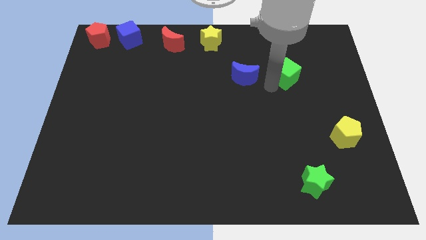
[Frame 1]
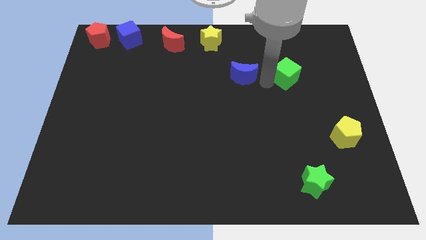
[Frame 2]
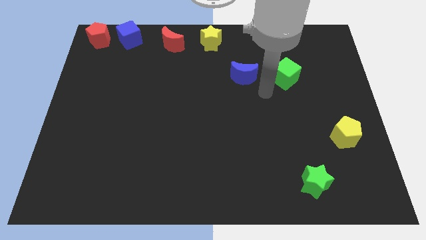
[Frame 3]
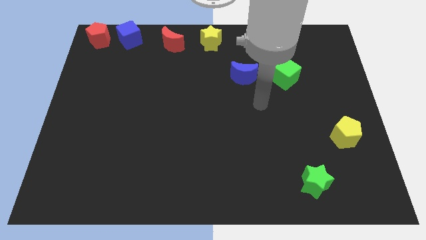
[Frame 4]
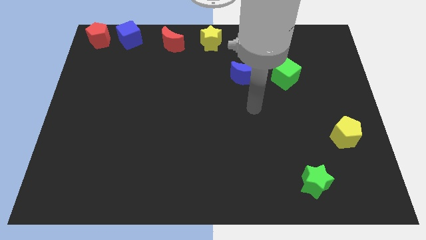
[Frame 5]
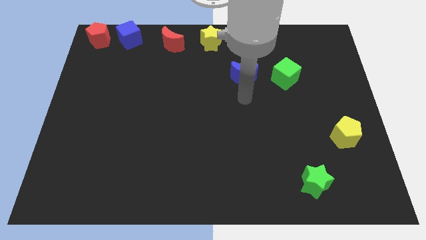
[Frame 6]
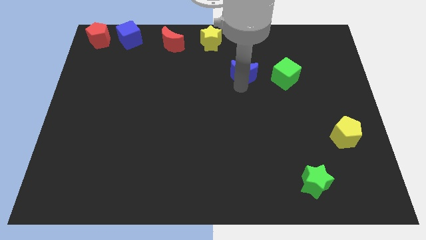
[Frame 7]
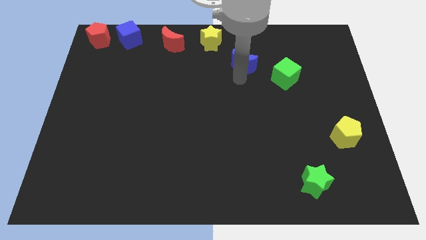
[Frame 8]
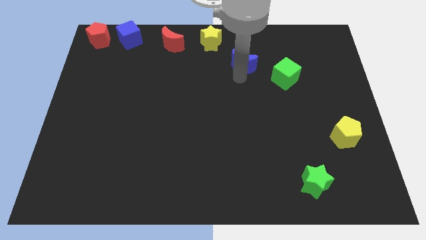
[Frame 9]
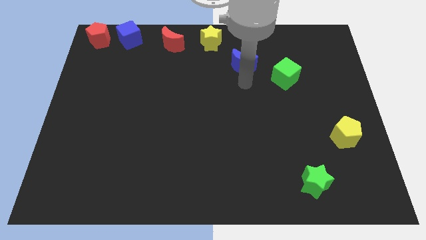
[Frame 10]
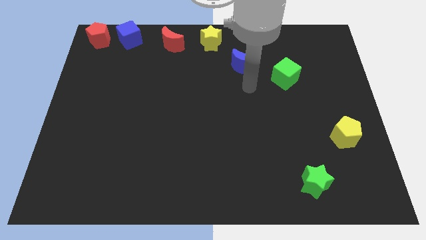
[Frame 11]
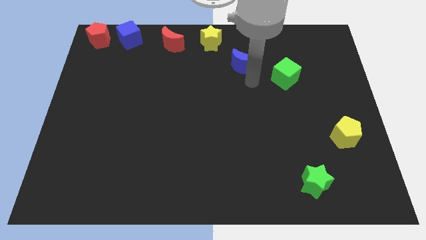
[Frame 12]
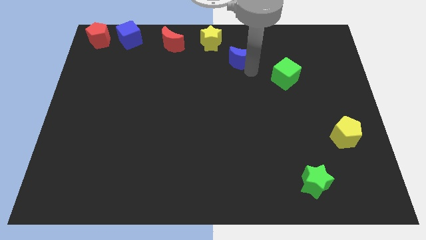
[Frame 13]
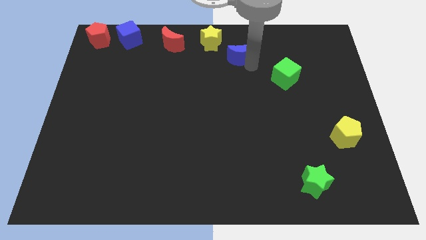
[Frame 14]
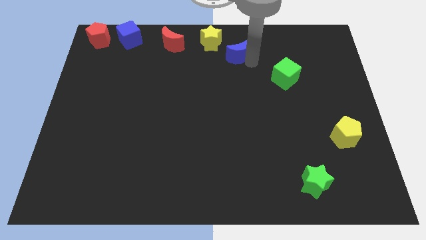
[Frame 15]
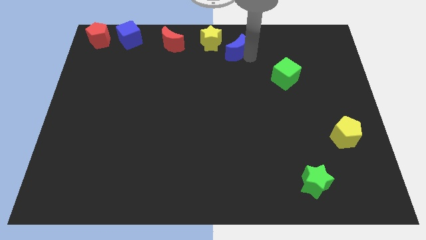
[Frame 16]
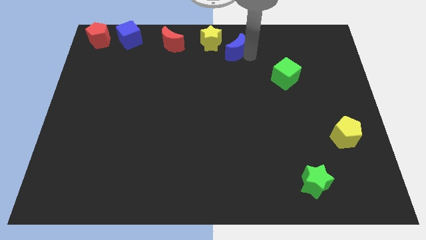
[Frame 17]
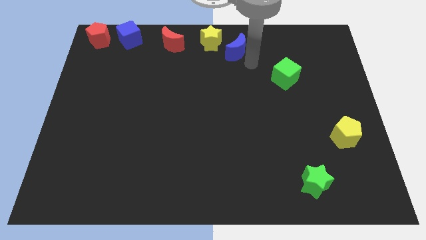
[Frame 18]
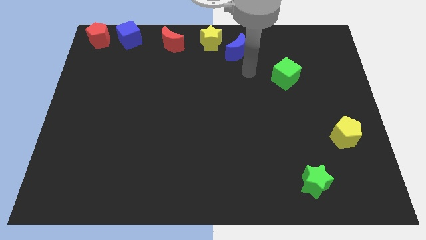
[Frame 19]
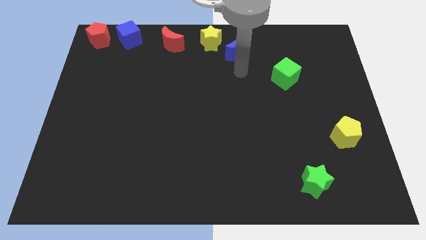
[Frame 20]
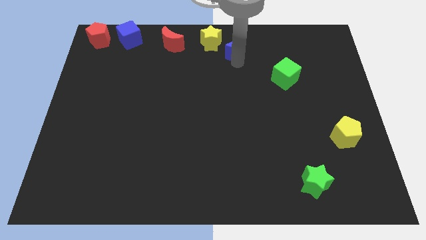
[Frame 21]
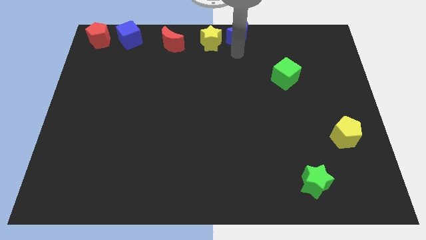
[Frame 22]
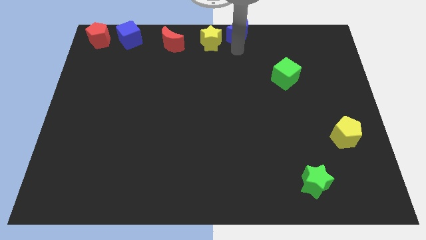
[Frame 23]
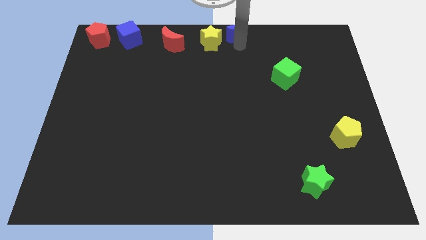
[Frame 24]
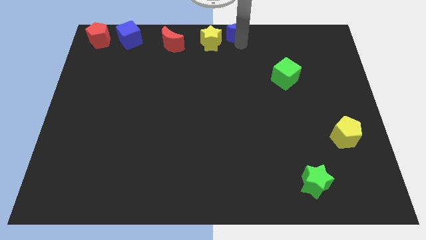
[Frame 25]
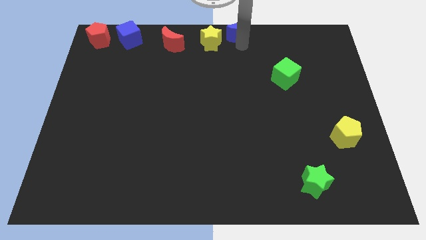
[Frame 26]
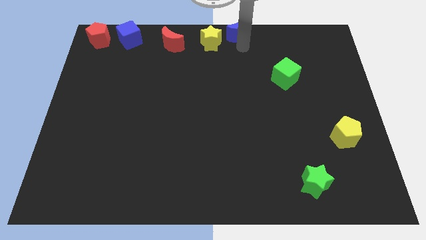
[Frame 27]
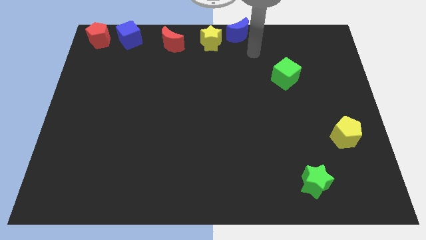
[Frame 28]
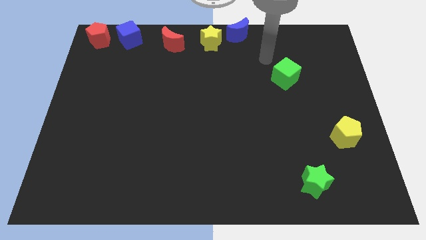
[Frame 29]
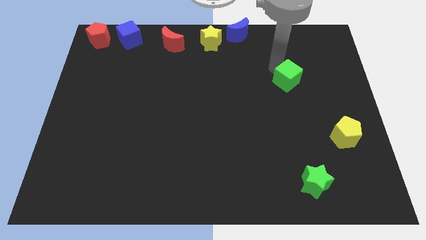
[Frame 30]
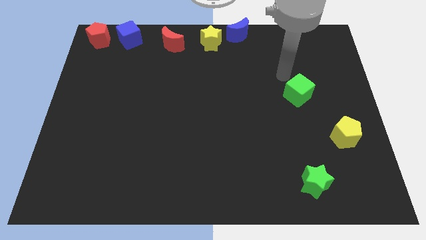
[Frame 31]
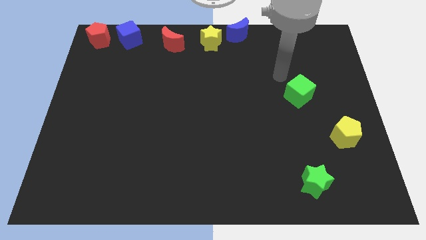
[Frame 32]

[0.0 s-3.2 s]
move blue moon towards yellow star

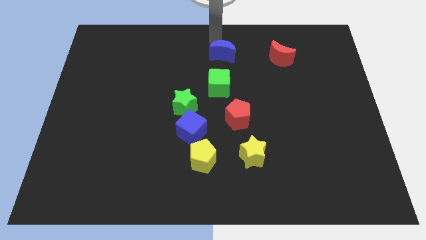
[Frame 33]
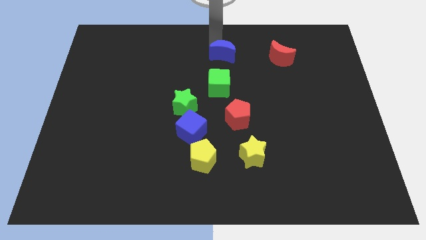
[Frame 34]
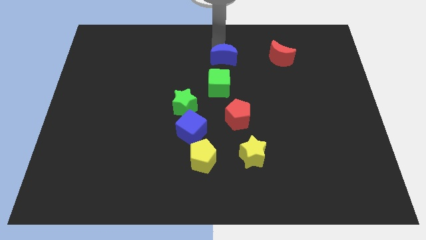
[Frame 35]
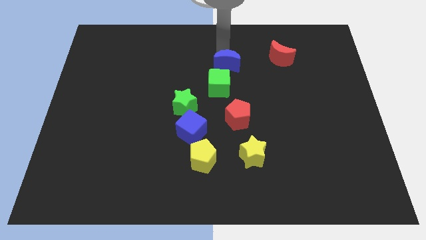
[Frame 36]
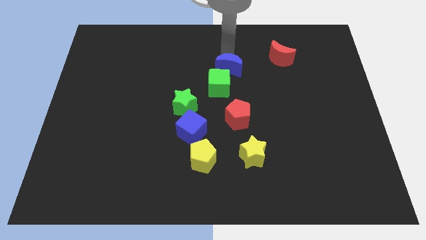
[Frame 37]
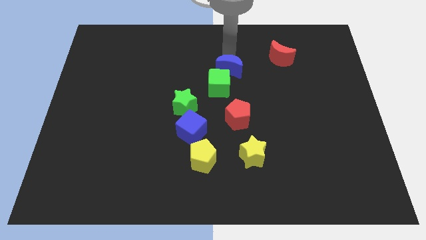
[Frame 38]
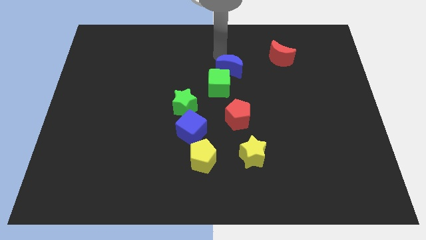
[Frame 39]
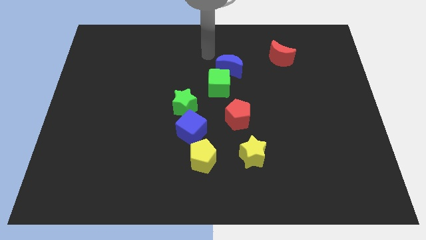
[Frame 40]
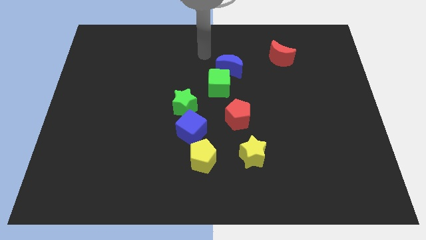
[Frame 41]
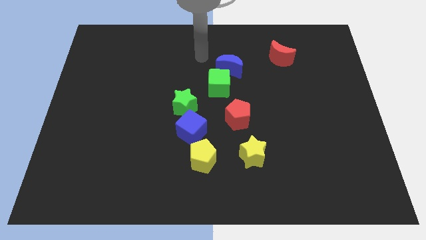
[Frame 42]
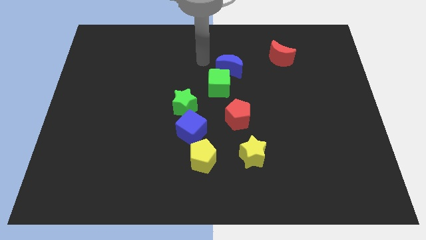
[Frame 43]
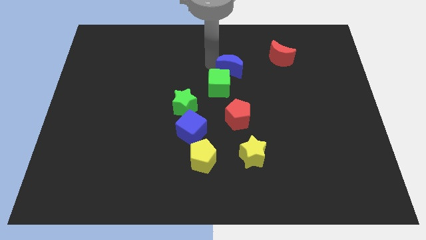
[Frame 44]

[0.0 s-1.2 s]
push the blue crescent towards the green cube

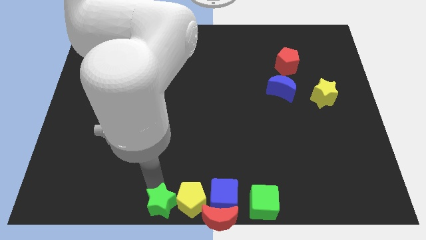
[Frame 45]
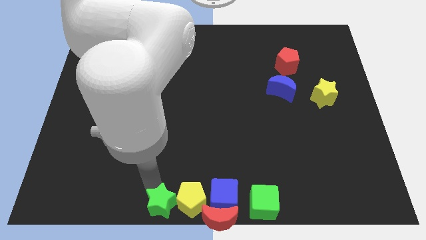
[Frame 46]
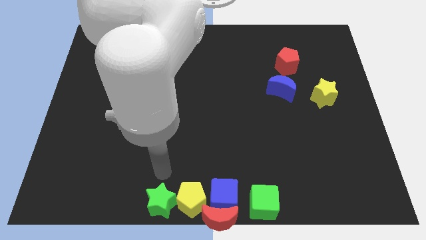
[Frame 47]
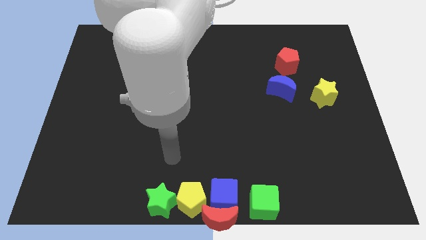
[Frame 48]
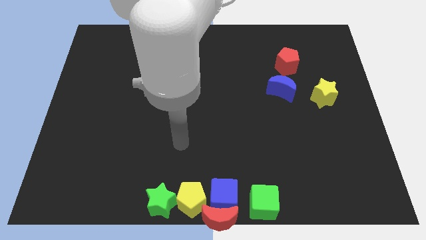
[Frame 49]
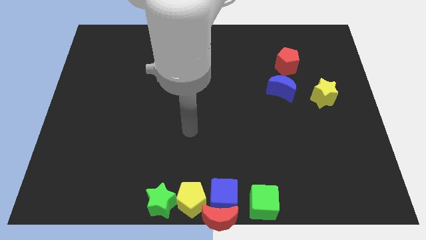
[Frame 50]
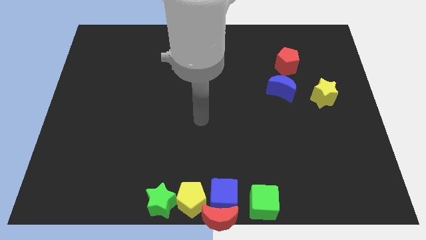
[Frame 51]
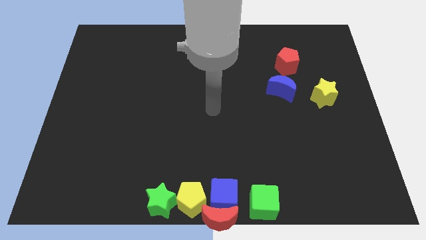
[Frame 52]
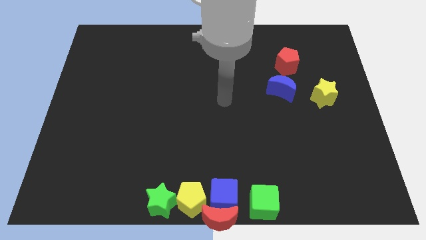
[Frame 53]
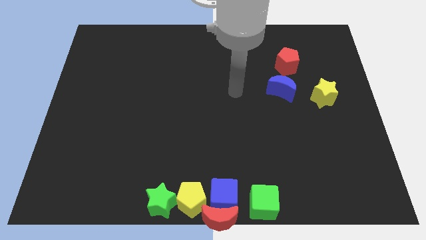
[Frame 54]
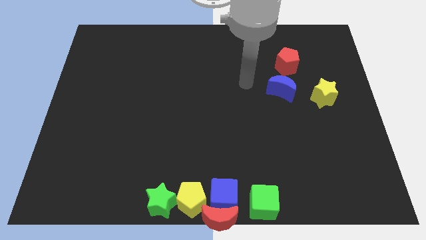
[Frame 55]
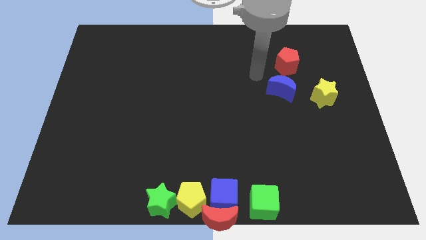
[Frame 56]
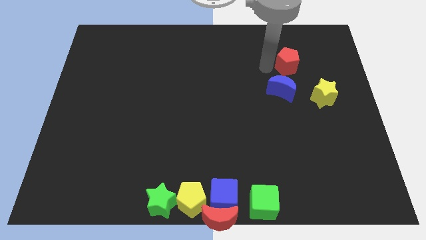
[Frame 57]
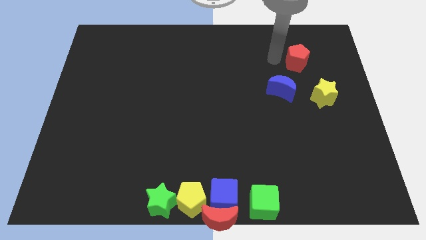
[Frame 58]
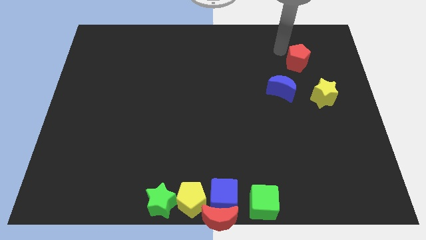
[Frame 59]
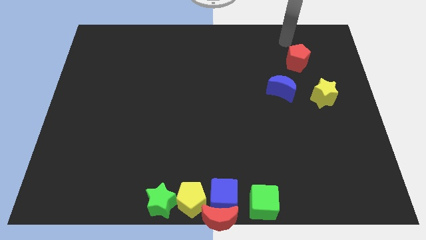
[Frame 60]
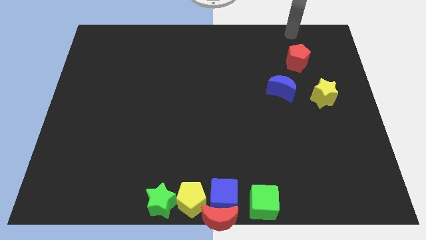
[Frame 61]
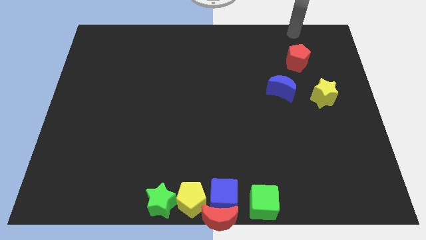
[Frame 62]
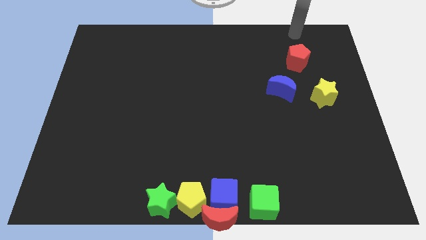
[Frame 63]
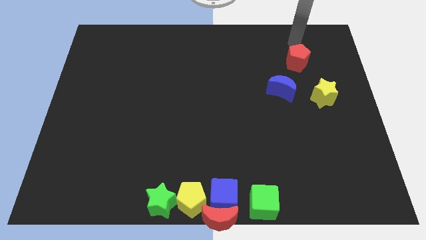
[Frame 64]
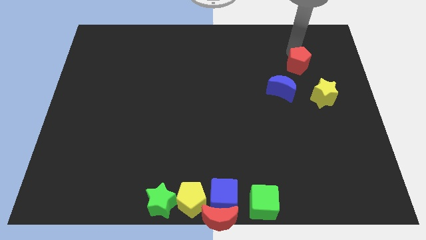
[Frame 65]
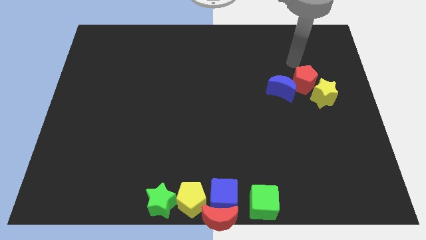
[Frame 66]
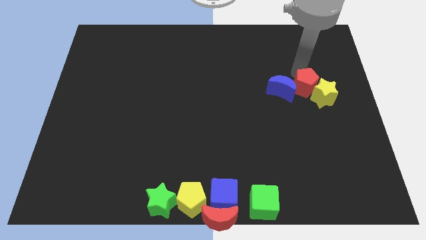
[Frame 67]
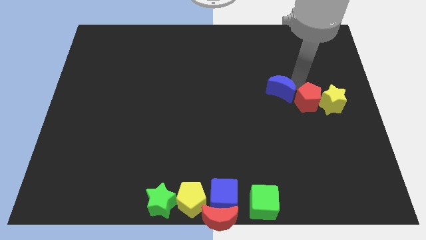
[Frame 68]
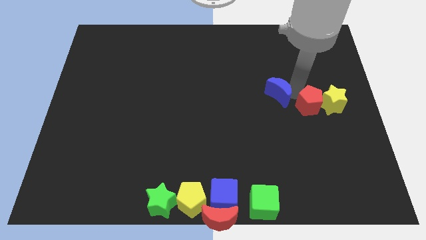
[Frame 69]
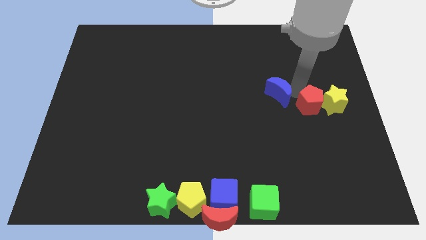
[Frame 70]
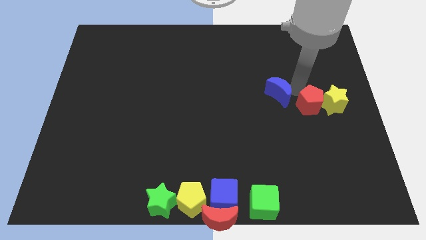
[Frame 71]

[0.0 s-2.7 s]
place the red pentagon left to the yellow star

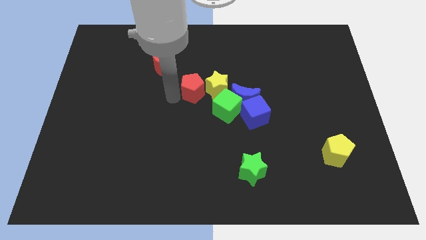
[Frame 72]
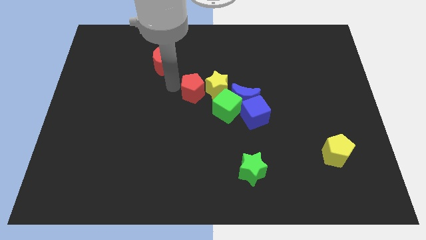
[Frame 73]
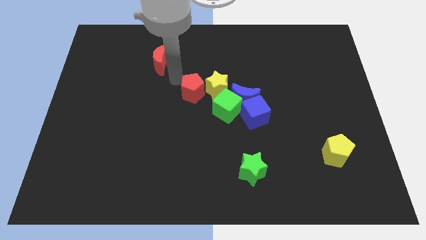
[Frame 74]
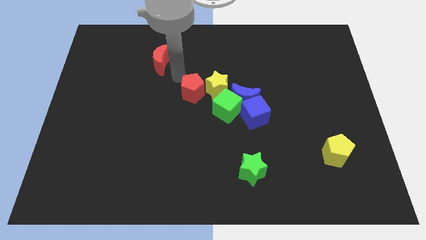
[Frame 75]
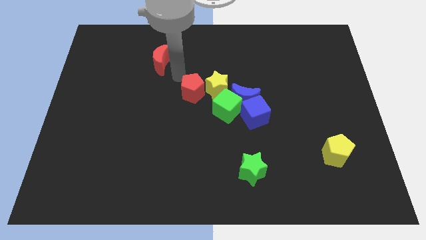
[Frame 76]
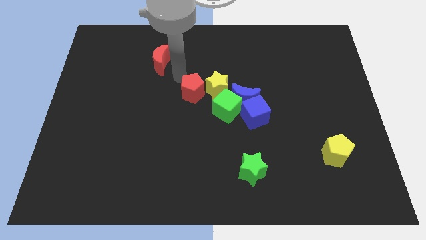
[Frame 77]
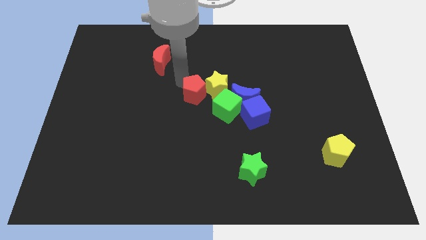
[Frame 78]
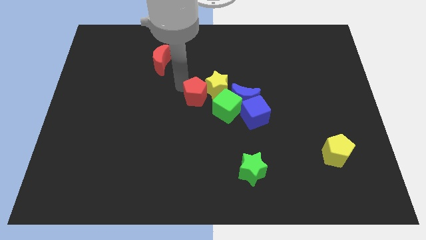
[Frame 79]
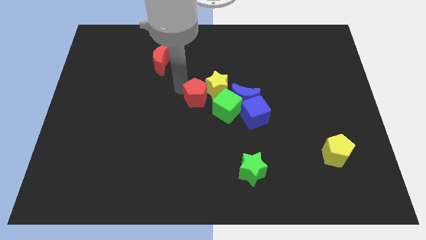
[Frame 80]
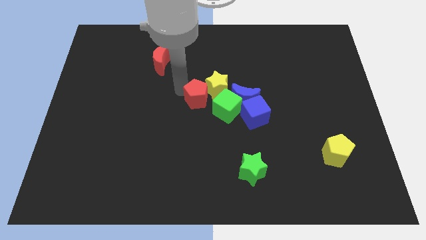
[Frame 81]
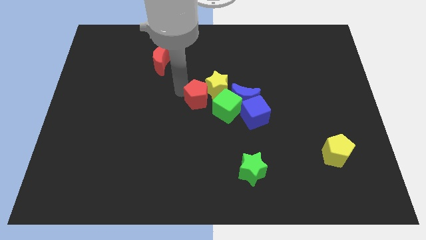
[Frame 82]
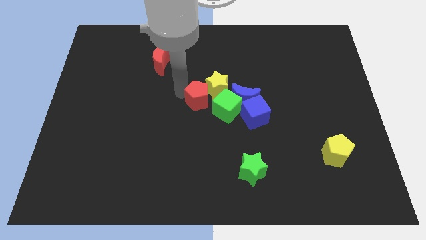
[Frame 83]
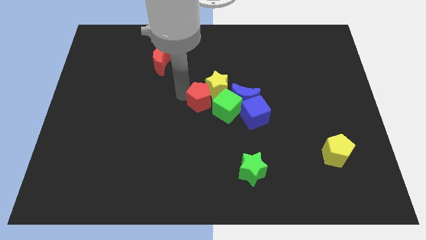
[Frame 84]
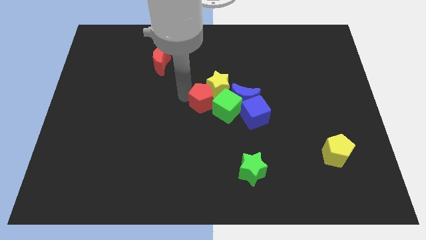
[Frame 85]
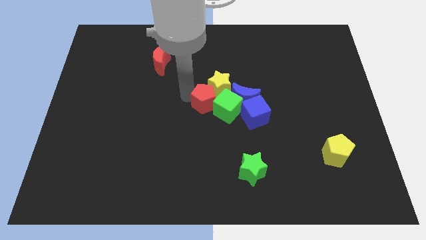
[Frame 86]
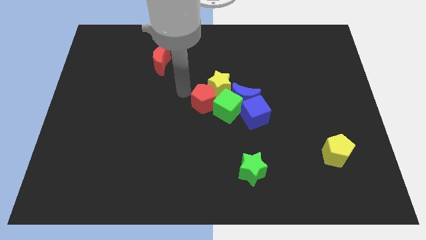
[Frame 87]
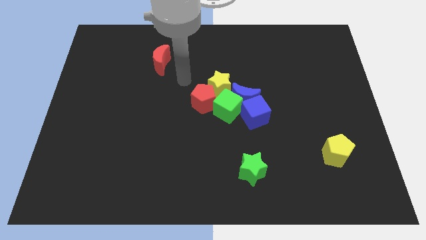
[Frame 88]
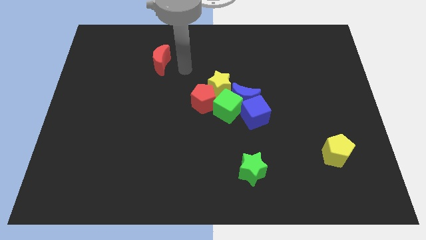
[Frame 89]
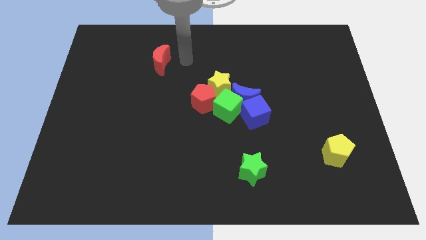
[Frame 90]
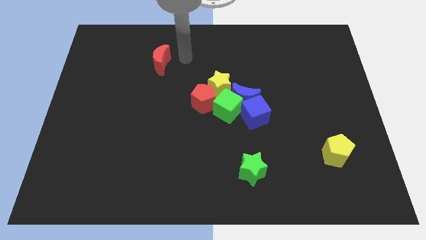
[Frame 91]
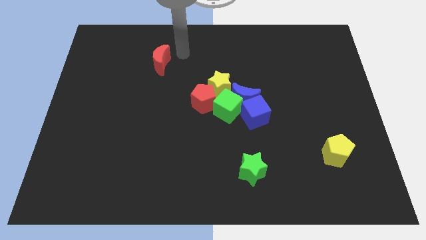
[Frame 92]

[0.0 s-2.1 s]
push the red pentagon into the yellow star and the green cube
